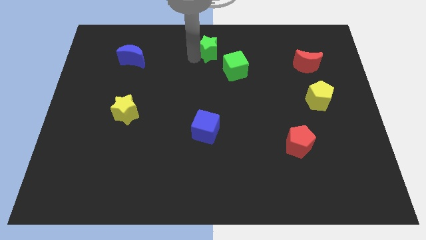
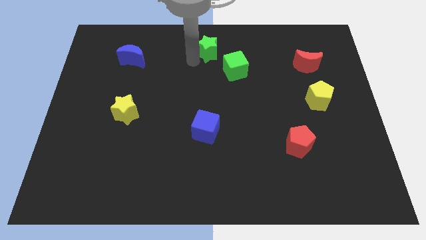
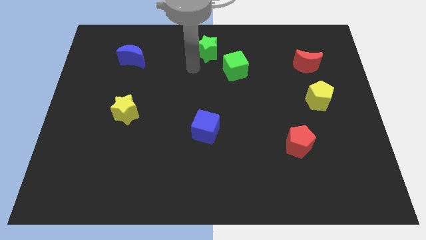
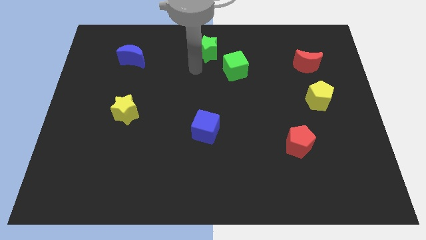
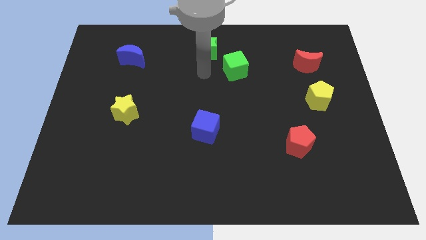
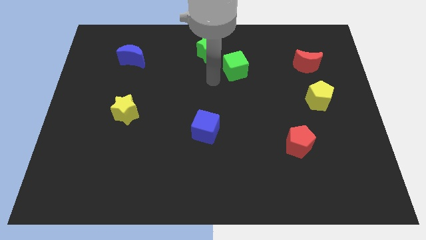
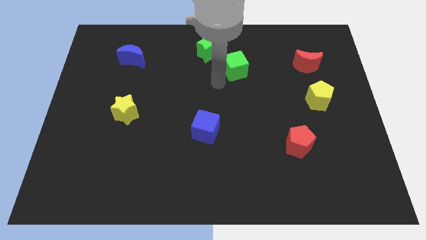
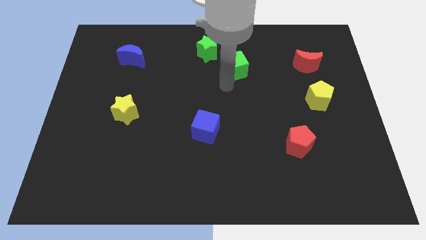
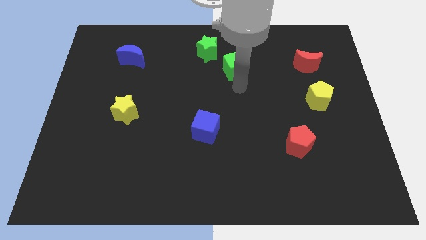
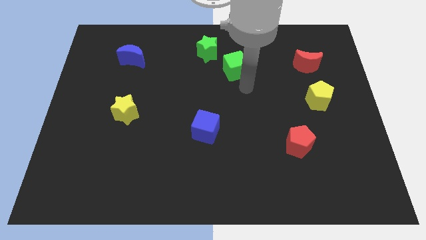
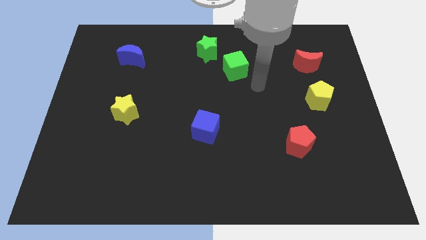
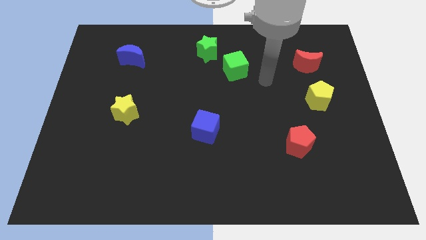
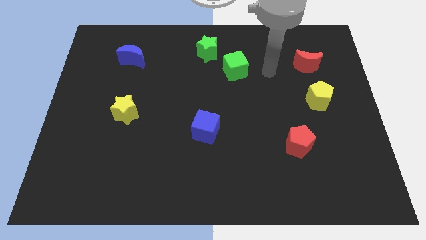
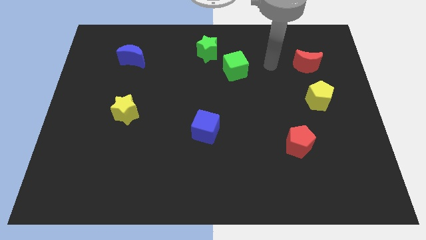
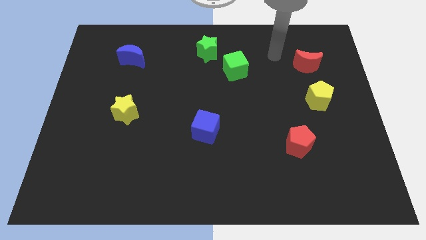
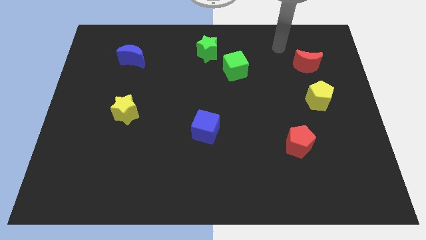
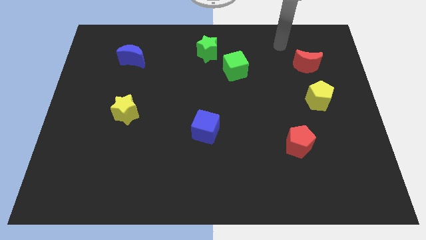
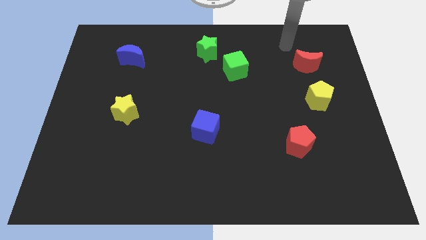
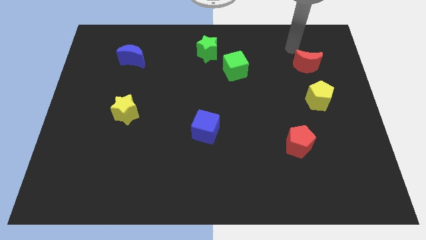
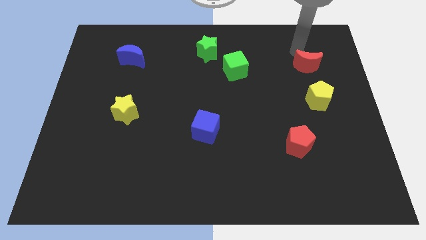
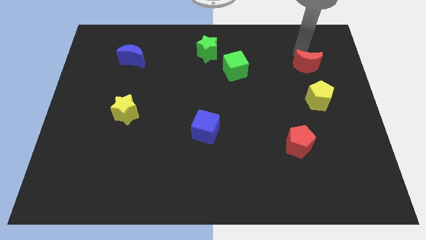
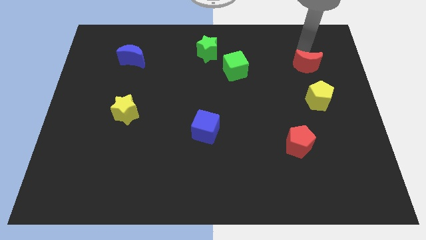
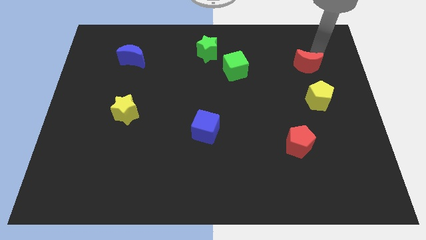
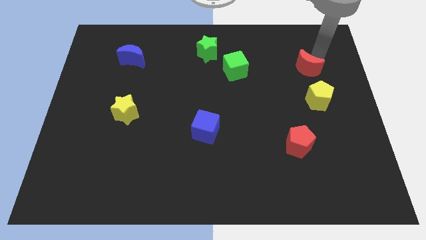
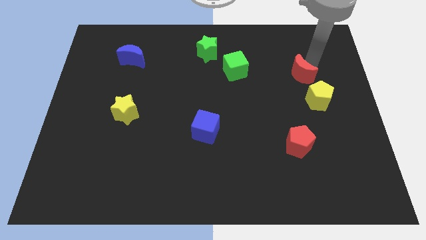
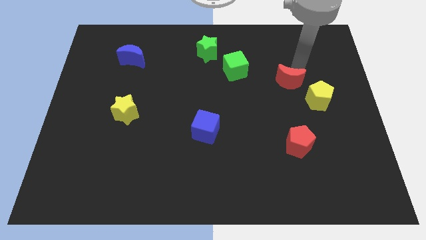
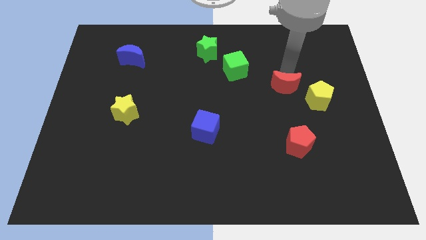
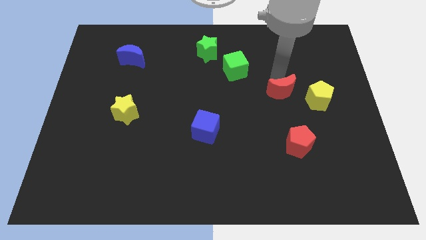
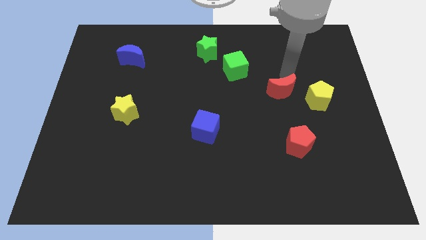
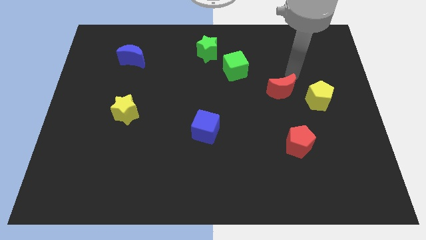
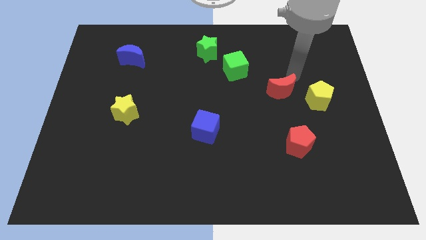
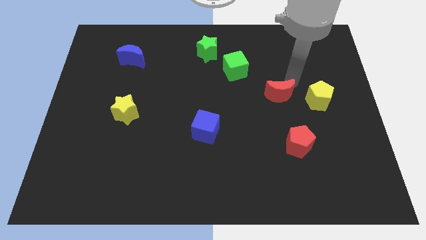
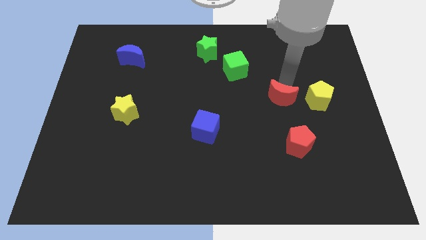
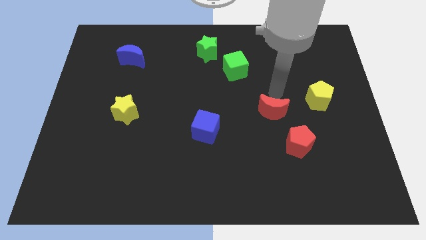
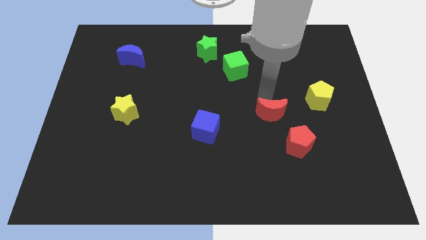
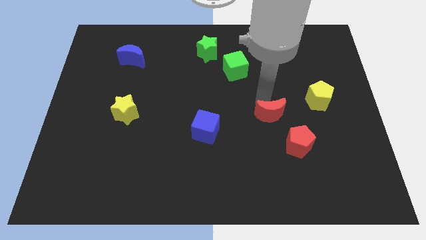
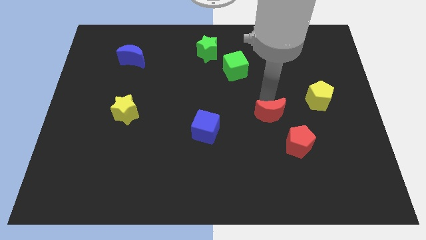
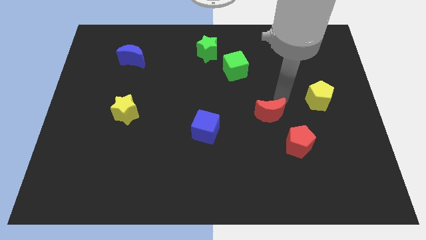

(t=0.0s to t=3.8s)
move red crescent diagonally towards red pentgaon

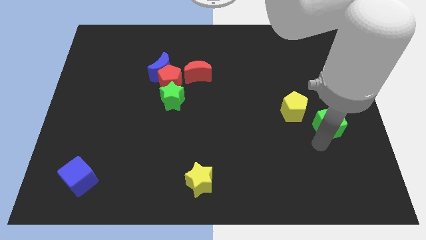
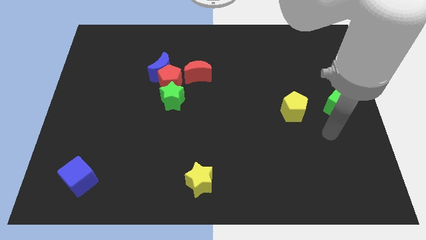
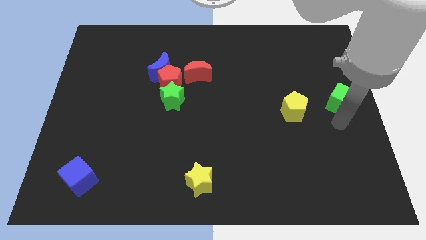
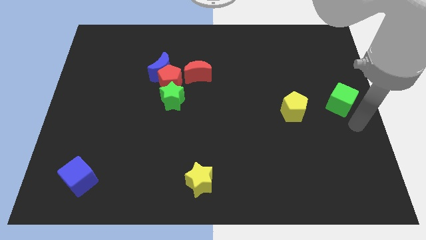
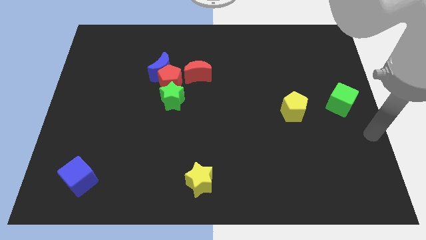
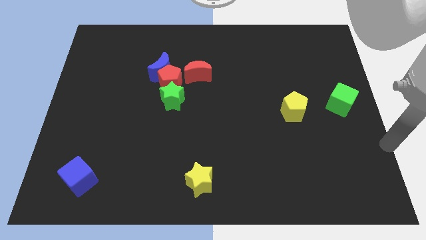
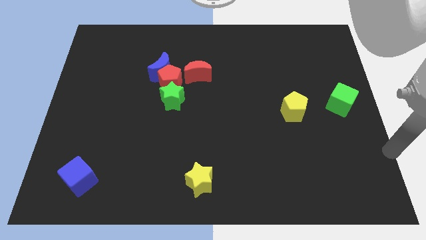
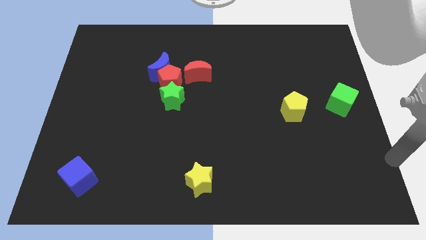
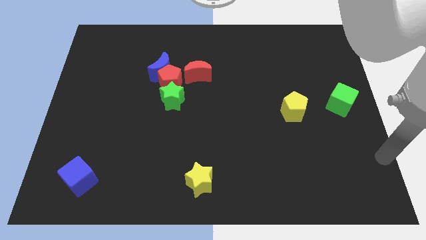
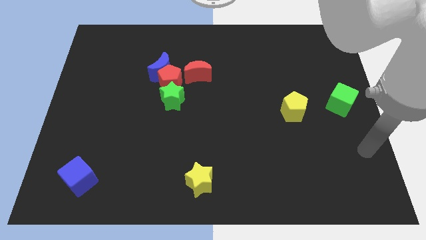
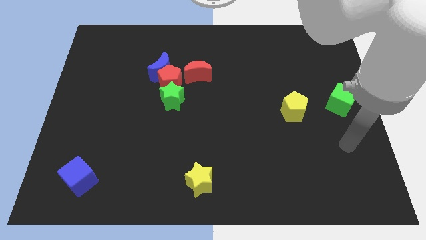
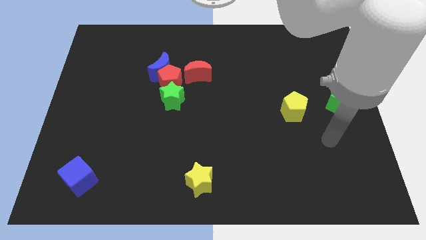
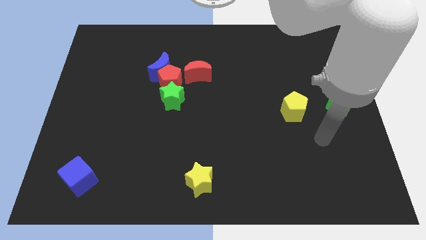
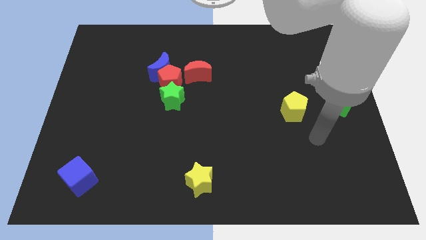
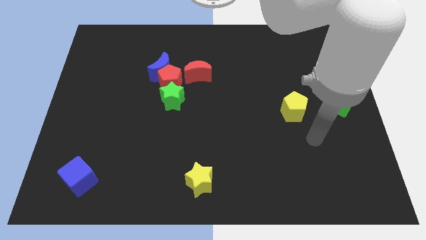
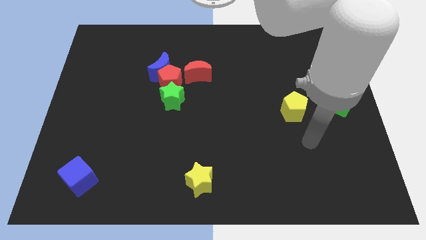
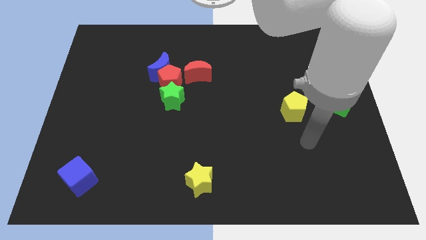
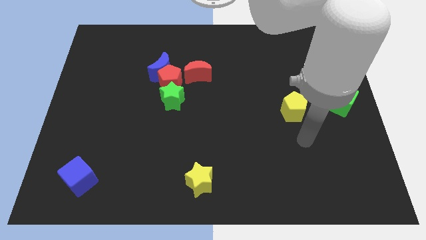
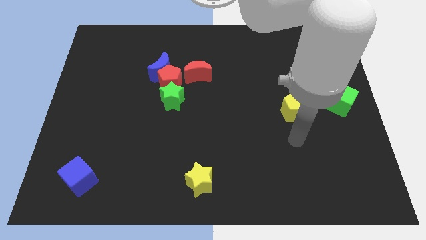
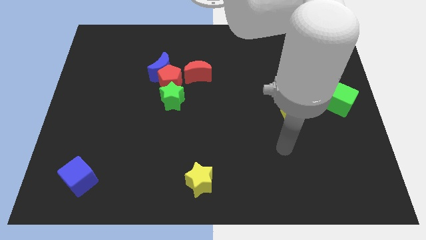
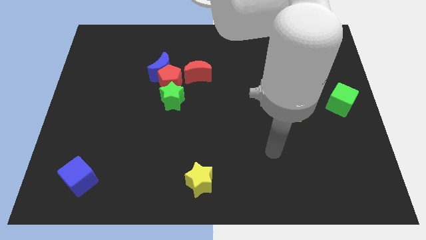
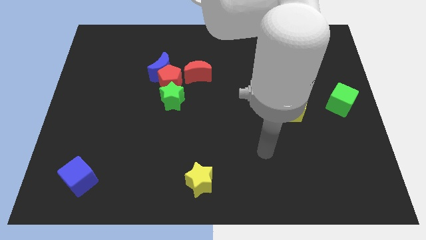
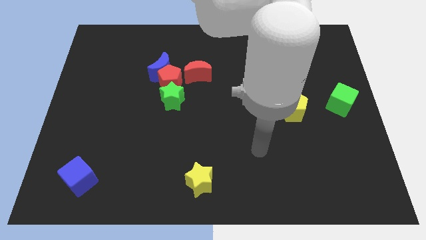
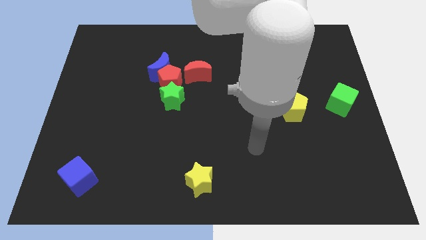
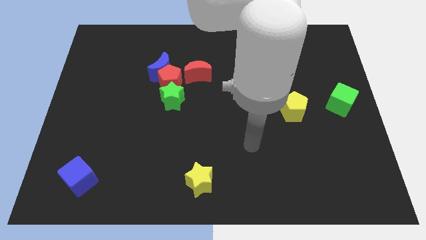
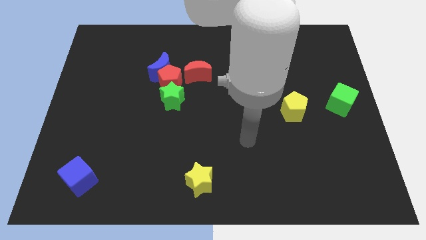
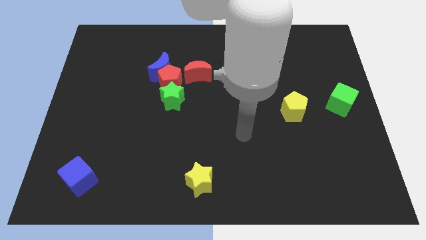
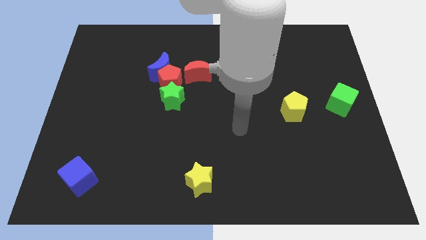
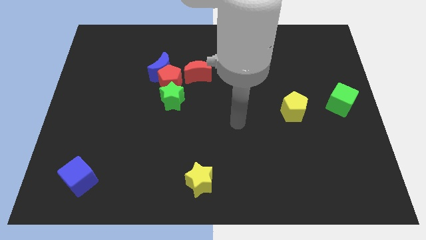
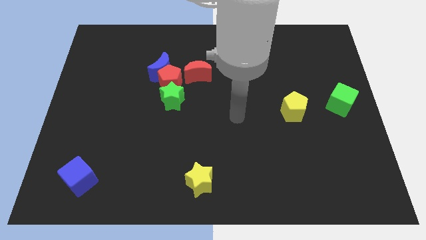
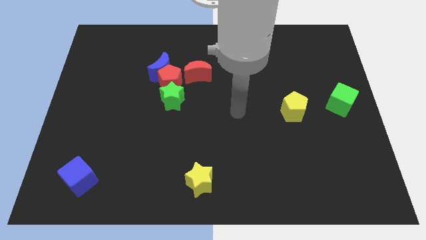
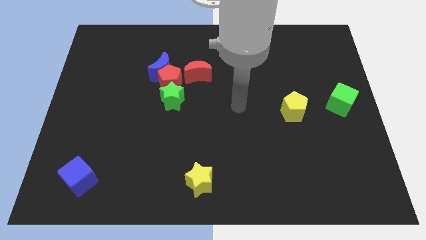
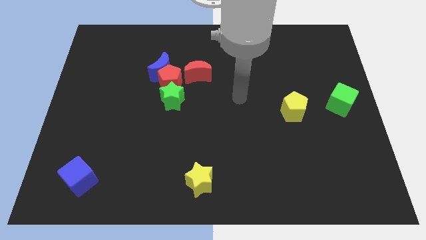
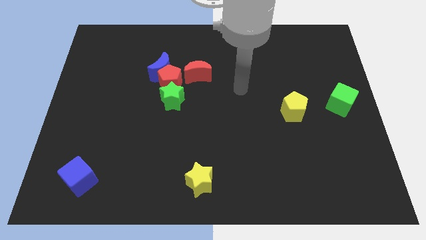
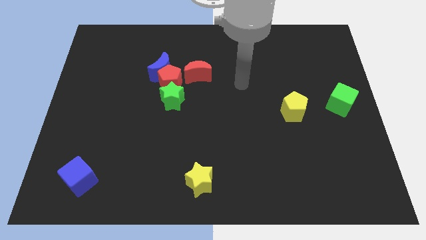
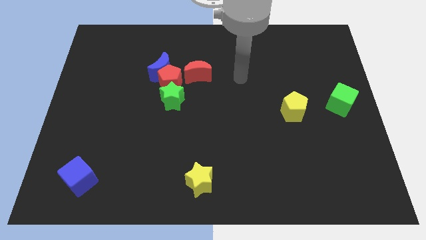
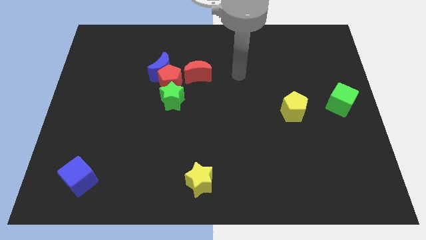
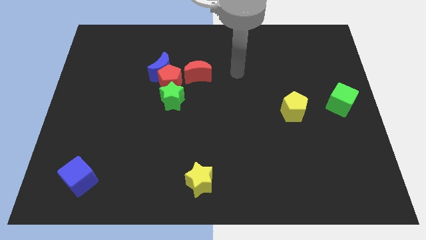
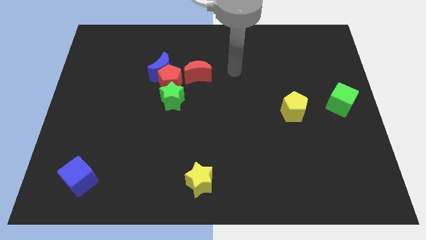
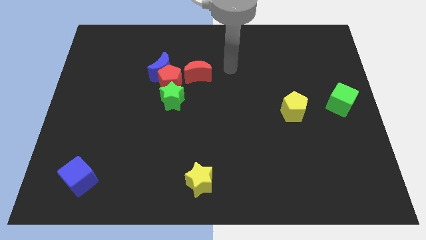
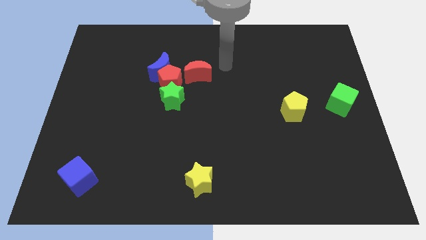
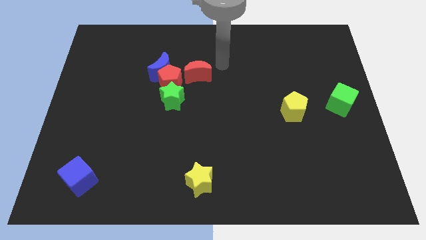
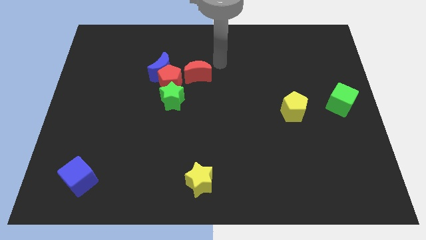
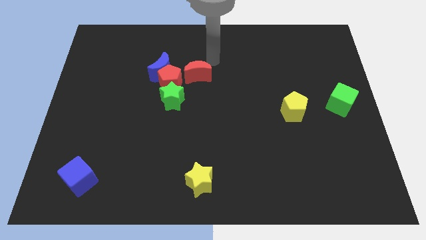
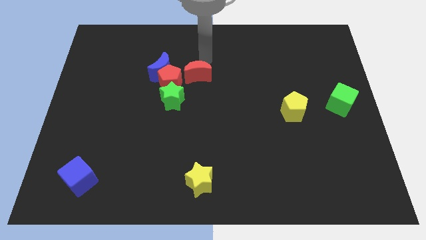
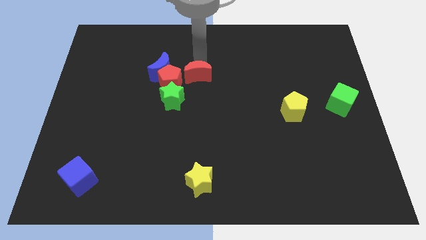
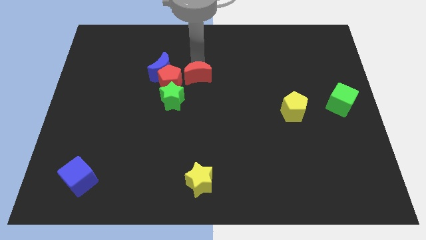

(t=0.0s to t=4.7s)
go near the red moon

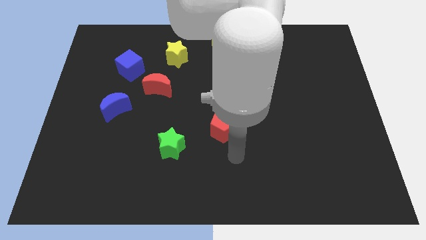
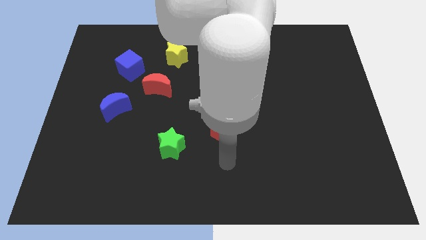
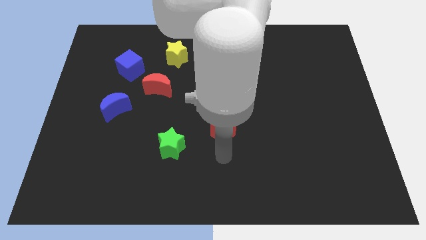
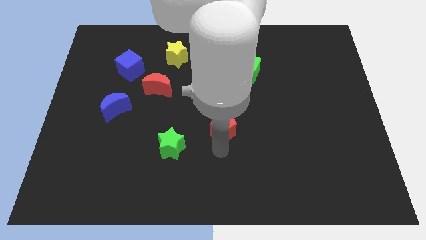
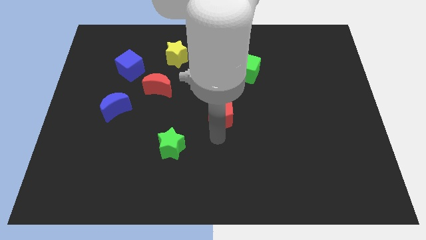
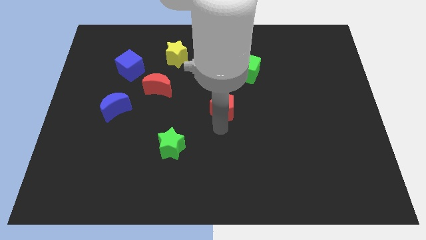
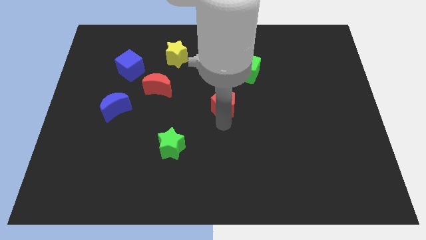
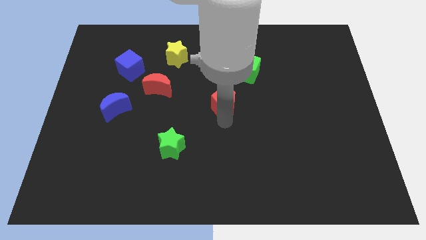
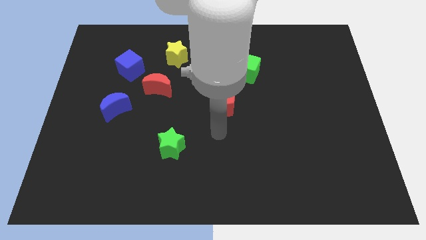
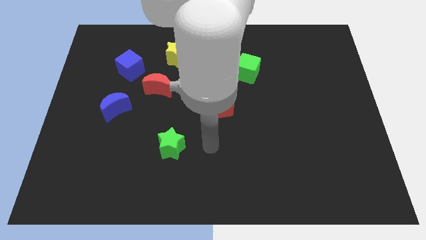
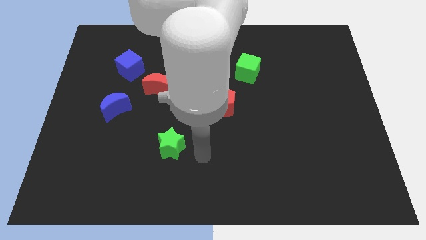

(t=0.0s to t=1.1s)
push red pentagon towards center
